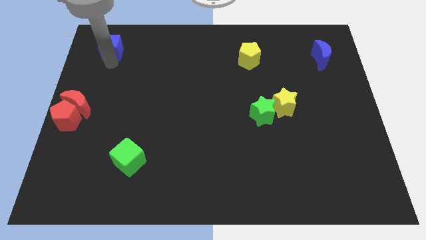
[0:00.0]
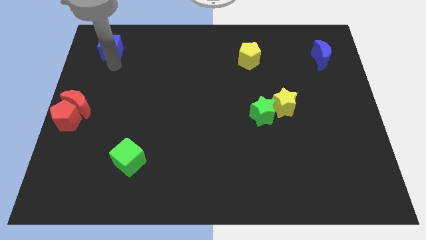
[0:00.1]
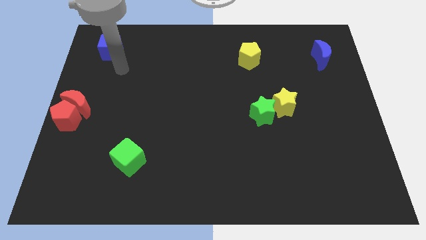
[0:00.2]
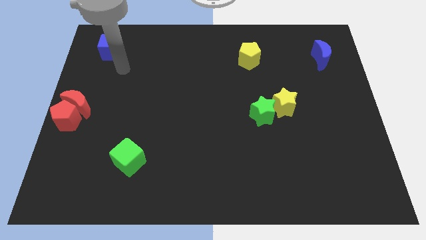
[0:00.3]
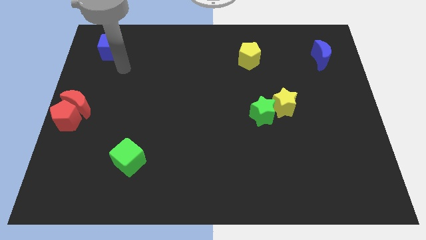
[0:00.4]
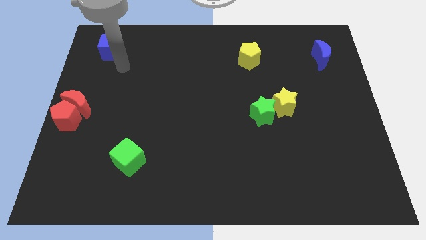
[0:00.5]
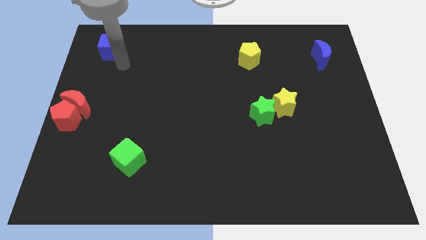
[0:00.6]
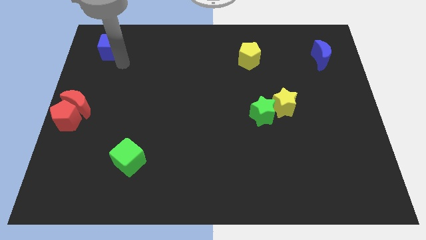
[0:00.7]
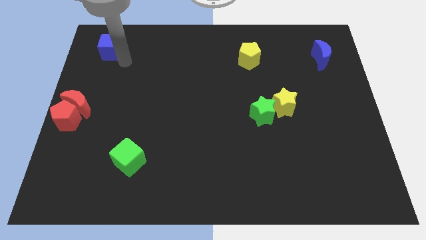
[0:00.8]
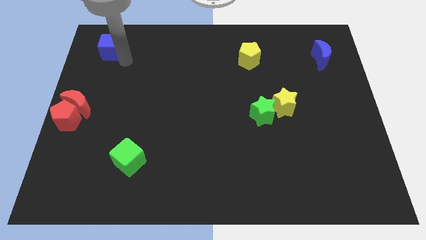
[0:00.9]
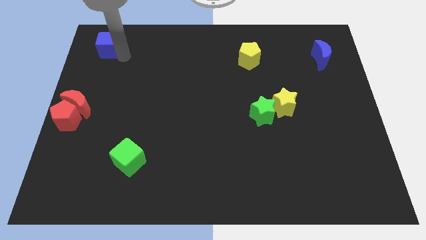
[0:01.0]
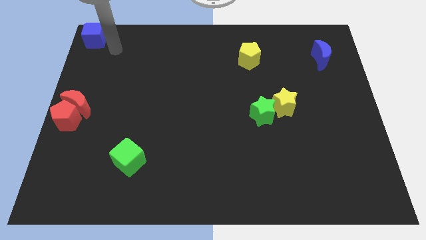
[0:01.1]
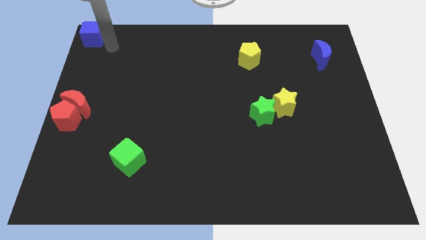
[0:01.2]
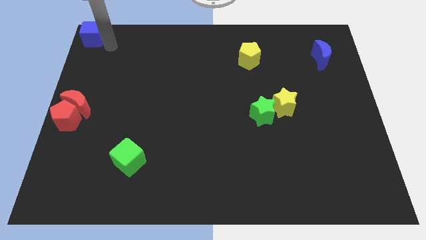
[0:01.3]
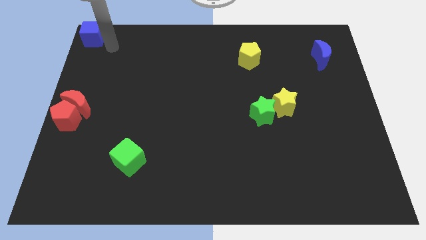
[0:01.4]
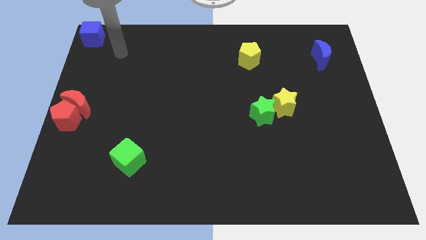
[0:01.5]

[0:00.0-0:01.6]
move the blue cube to the top left corner

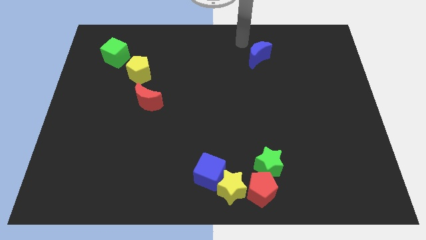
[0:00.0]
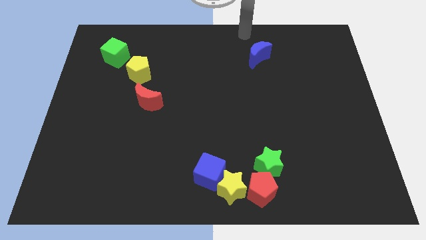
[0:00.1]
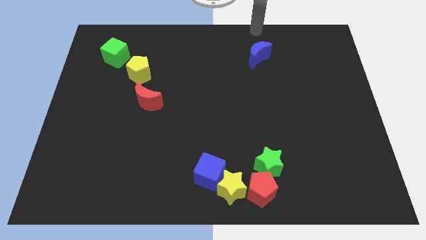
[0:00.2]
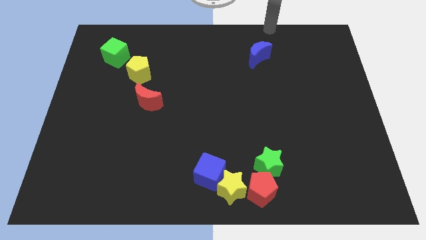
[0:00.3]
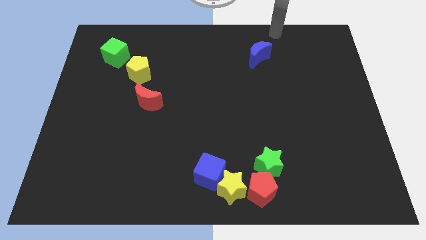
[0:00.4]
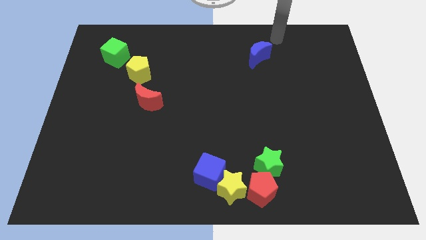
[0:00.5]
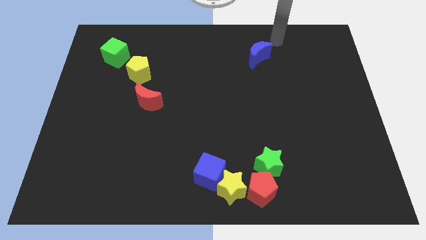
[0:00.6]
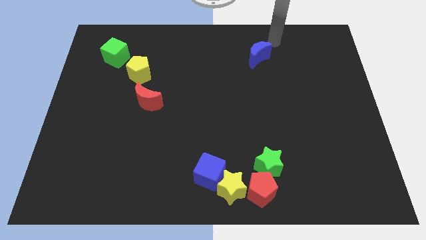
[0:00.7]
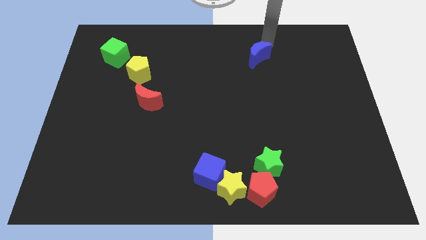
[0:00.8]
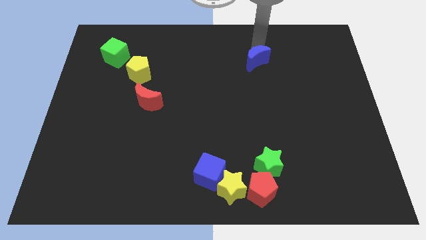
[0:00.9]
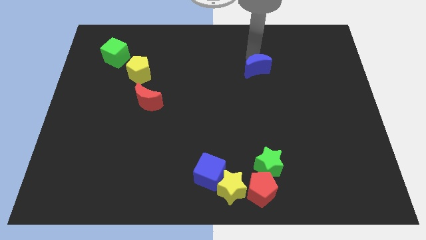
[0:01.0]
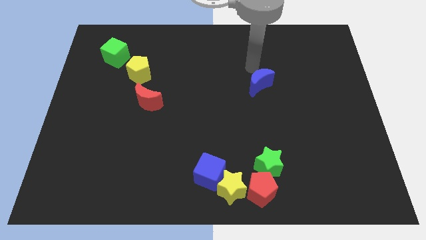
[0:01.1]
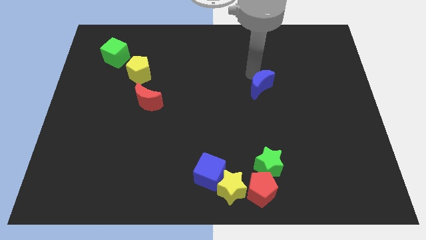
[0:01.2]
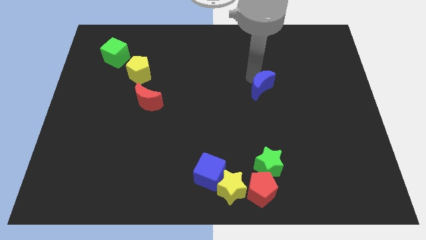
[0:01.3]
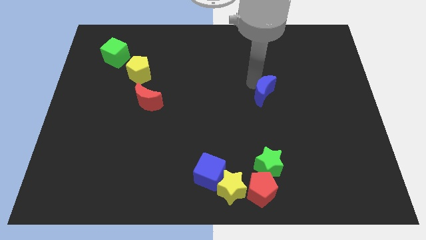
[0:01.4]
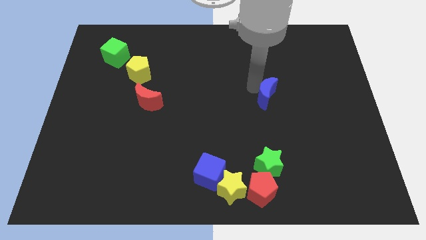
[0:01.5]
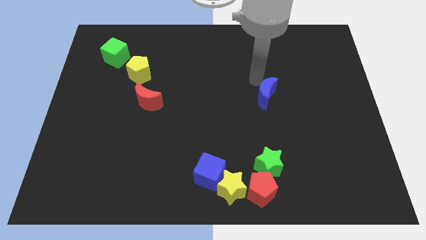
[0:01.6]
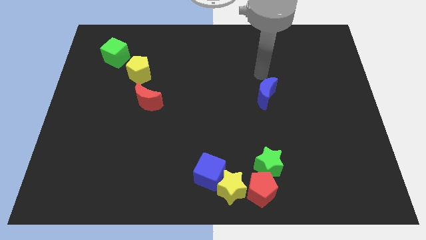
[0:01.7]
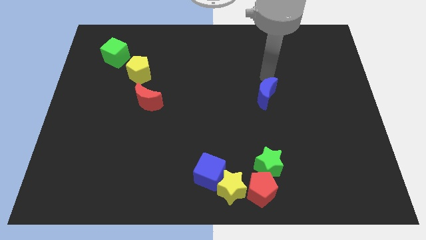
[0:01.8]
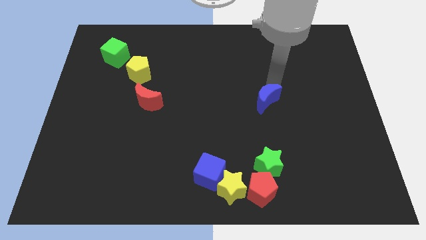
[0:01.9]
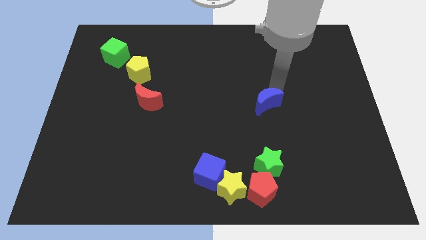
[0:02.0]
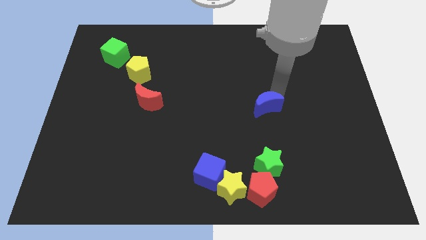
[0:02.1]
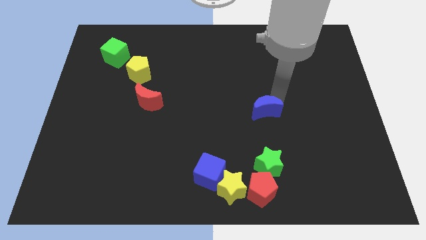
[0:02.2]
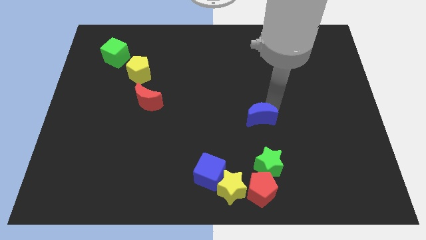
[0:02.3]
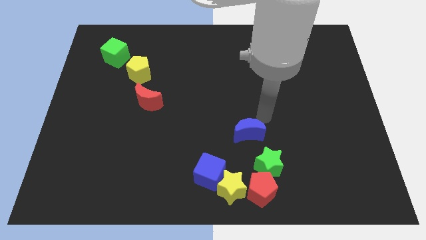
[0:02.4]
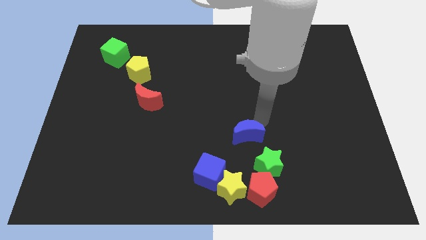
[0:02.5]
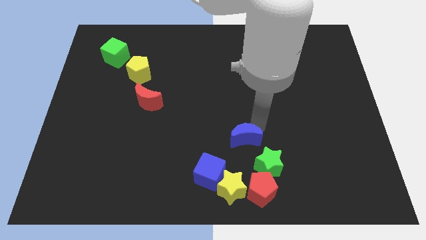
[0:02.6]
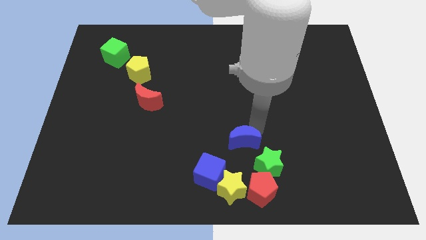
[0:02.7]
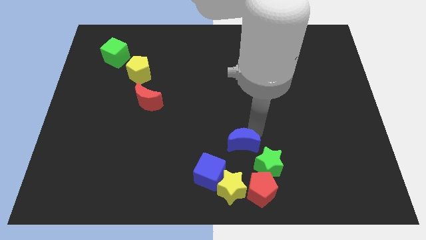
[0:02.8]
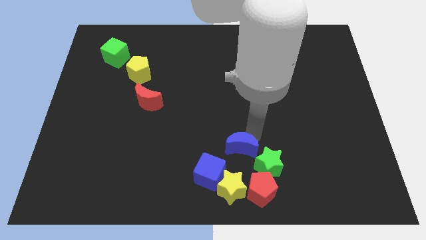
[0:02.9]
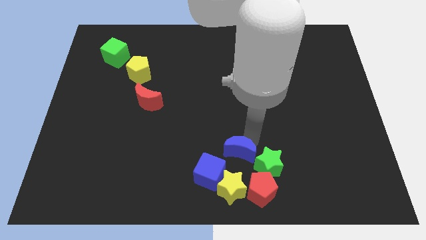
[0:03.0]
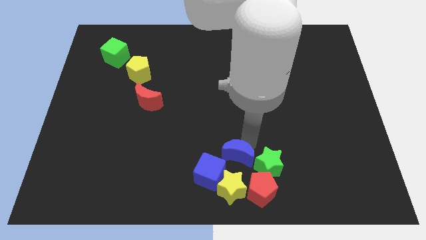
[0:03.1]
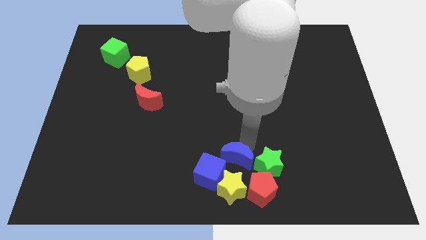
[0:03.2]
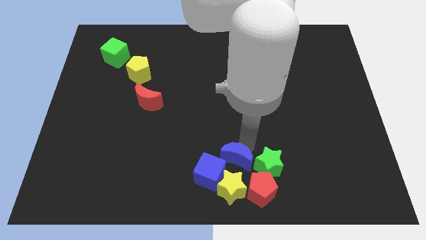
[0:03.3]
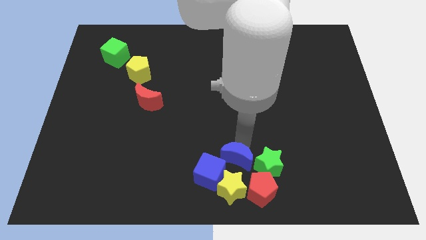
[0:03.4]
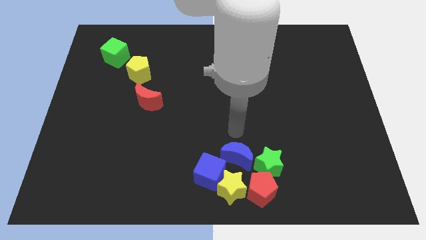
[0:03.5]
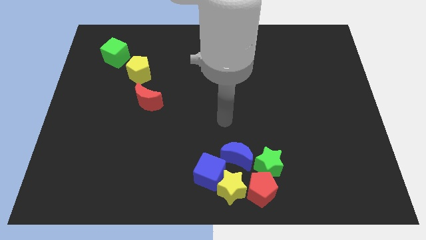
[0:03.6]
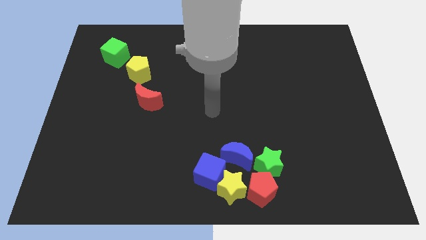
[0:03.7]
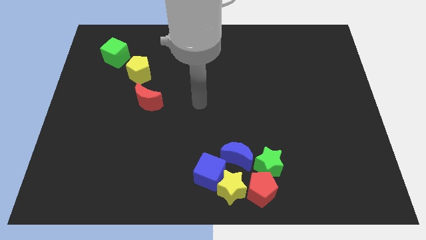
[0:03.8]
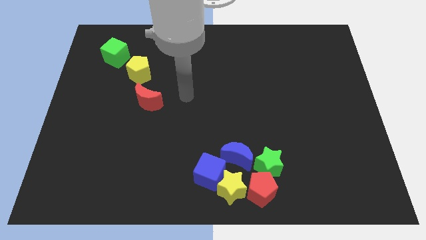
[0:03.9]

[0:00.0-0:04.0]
place the blue crescent to the left of the green star

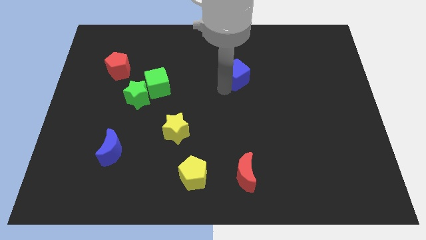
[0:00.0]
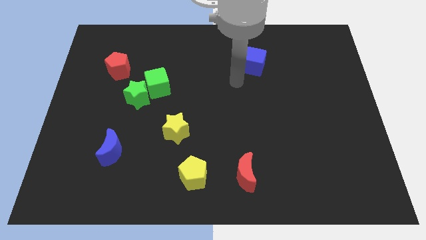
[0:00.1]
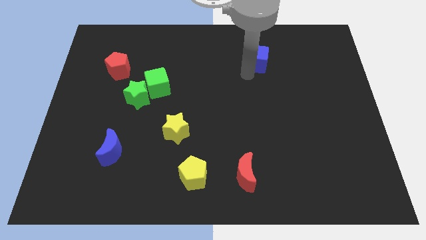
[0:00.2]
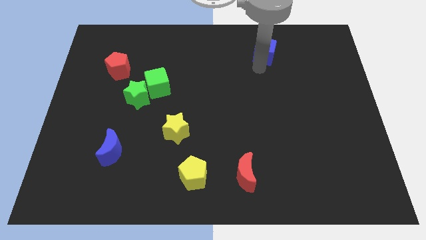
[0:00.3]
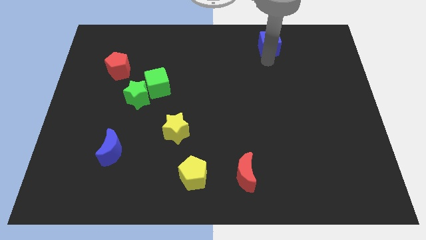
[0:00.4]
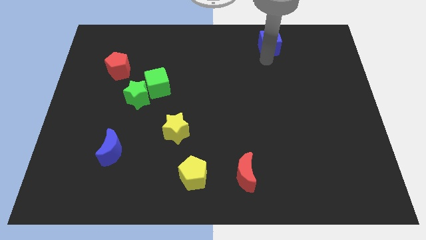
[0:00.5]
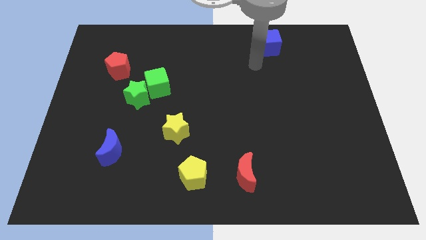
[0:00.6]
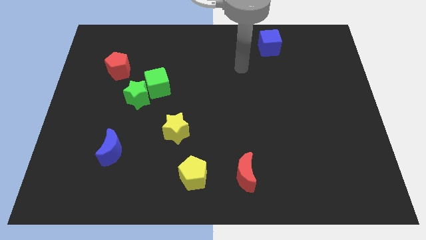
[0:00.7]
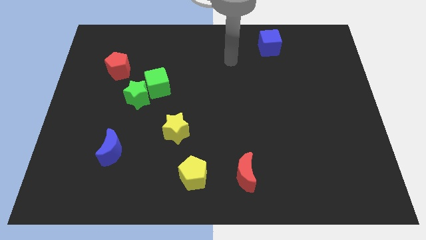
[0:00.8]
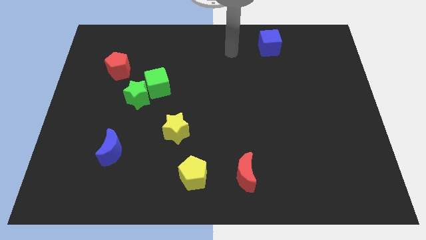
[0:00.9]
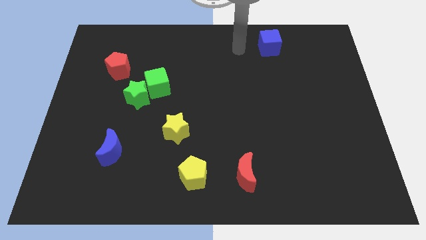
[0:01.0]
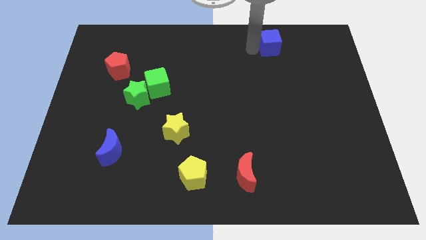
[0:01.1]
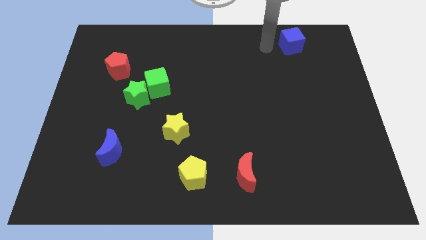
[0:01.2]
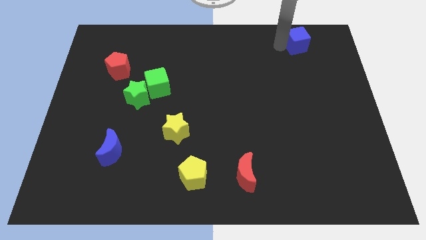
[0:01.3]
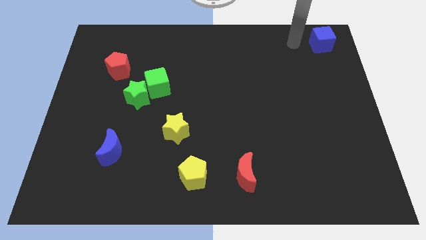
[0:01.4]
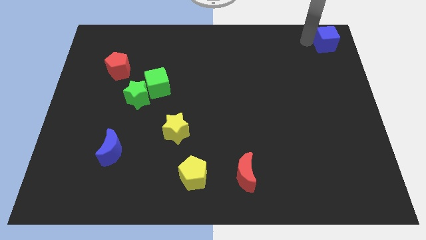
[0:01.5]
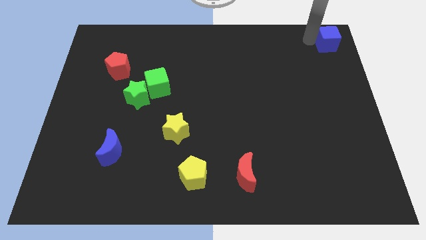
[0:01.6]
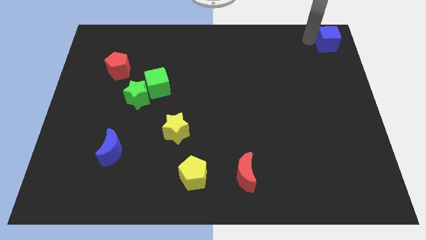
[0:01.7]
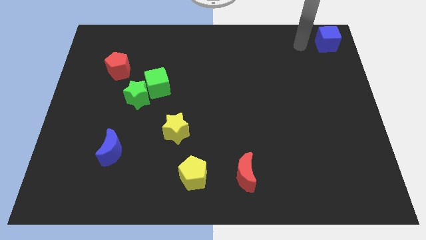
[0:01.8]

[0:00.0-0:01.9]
place blue cube towards top right corner

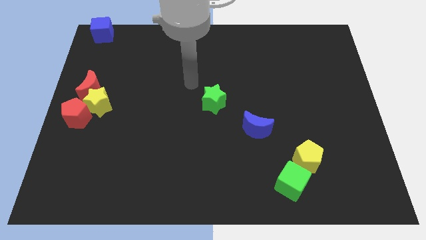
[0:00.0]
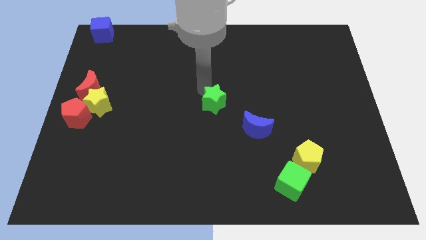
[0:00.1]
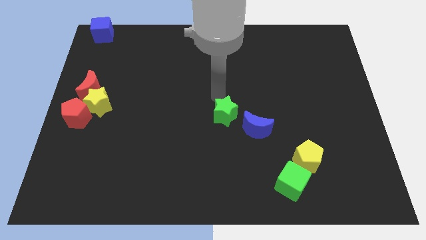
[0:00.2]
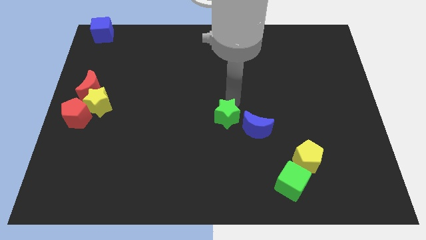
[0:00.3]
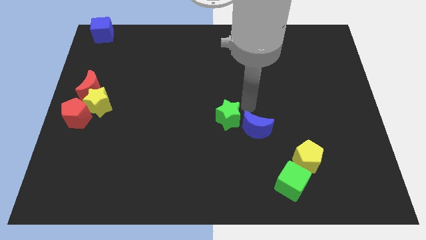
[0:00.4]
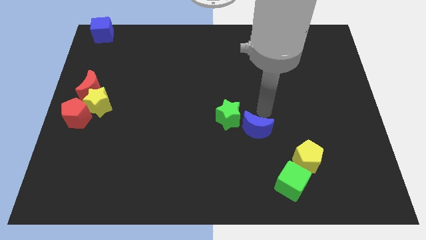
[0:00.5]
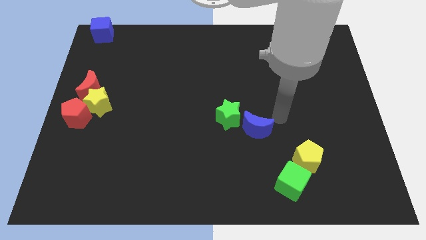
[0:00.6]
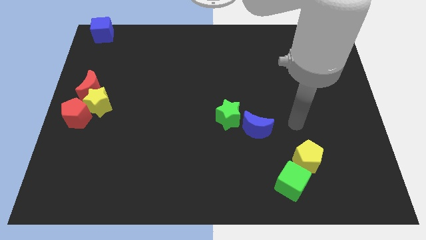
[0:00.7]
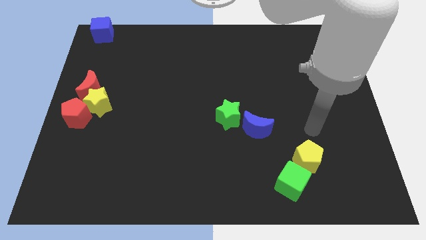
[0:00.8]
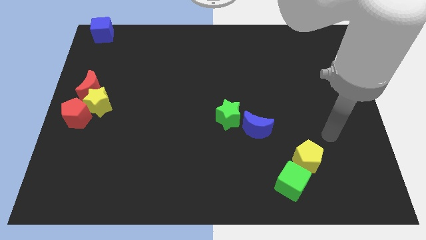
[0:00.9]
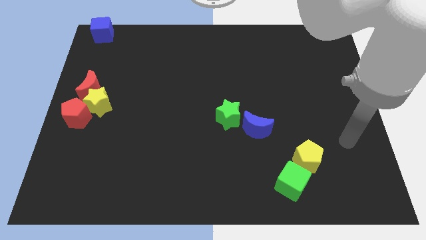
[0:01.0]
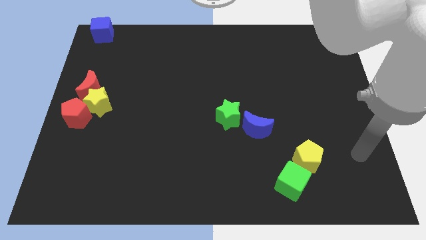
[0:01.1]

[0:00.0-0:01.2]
slightly push the green star to the left of the blue crescent

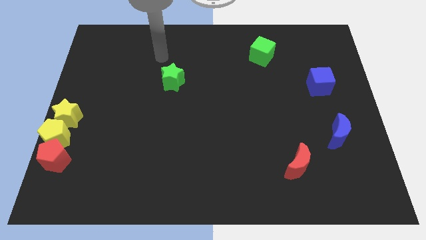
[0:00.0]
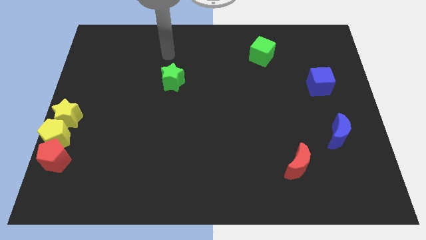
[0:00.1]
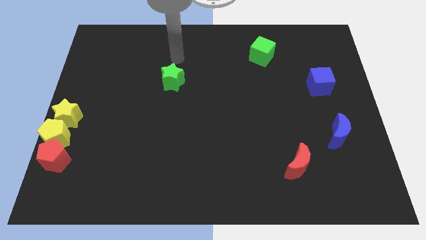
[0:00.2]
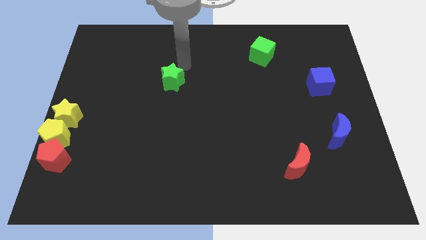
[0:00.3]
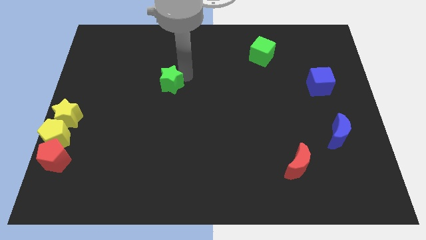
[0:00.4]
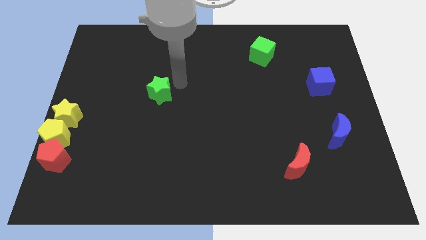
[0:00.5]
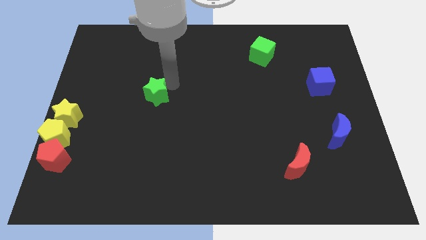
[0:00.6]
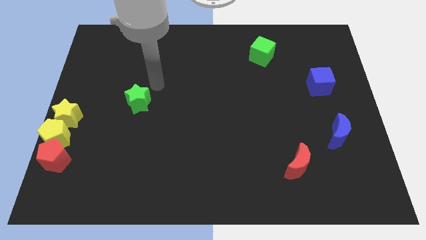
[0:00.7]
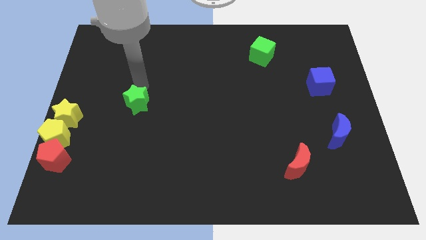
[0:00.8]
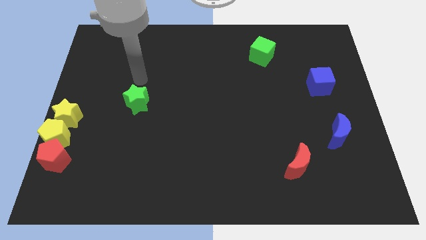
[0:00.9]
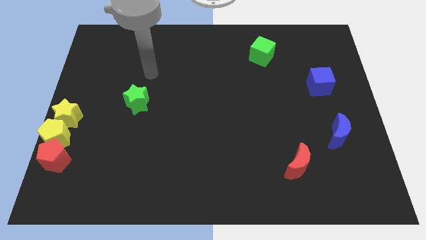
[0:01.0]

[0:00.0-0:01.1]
move green star towards yellow blocks
